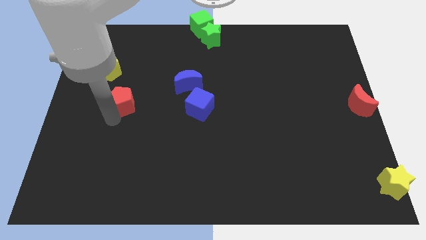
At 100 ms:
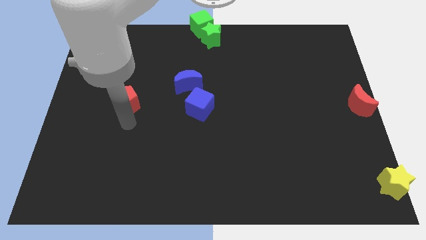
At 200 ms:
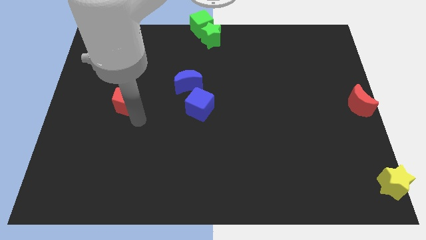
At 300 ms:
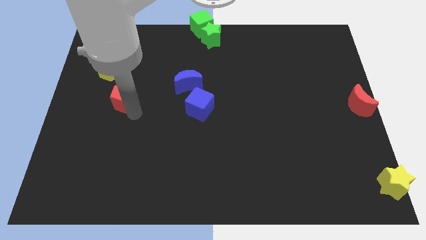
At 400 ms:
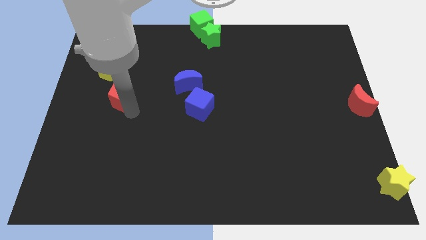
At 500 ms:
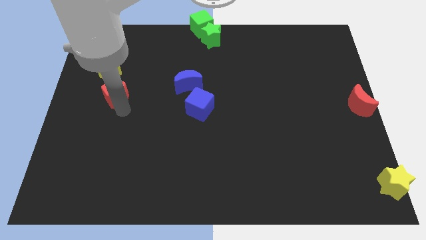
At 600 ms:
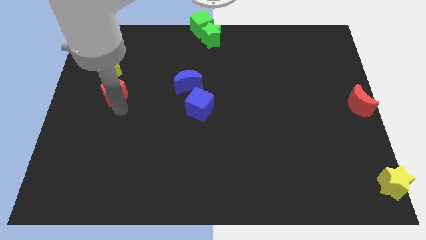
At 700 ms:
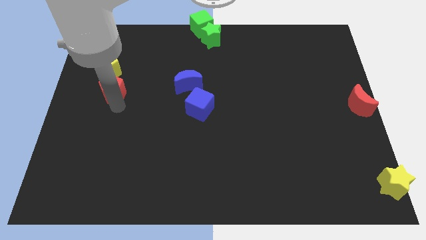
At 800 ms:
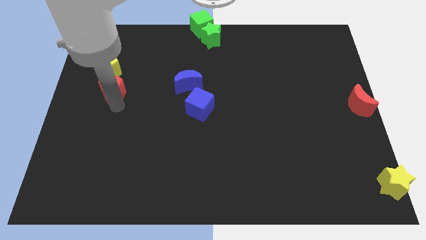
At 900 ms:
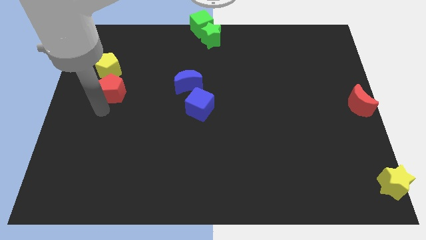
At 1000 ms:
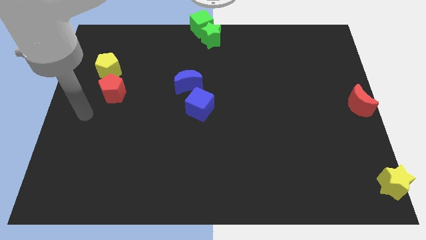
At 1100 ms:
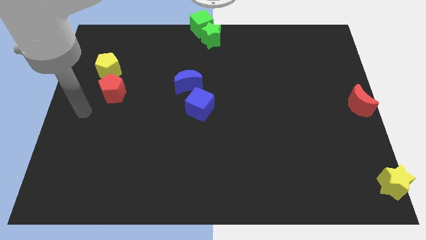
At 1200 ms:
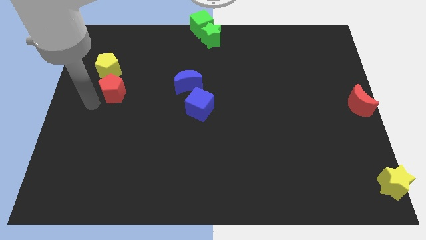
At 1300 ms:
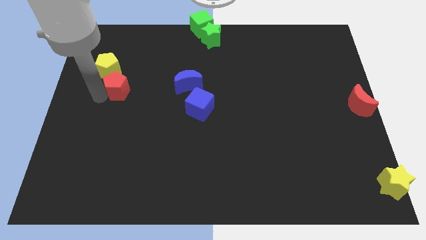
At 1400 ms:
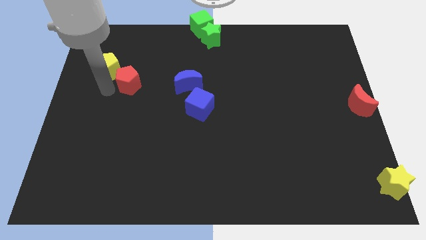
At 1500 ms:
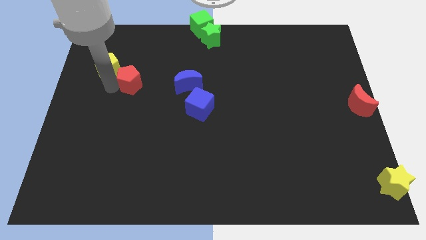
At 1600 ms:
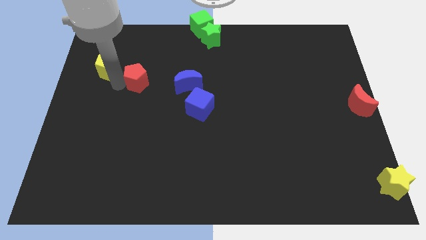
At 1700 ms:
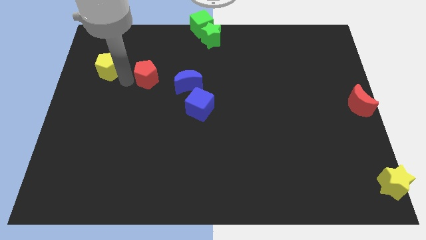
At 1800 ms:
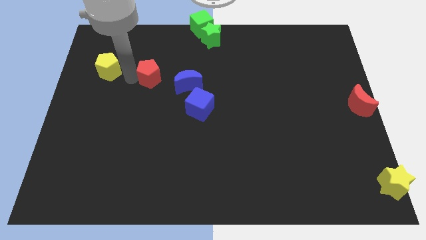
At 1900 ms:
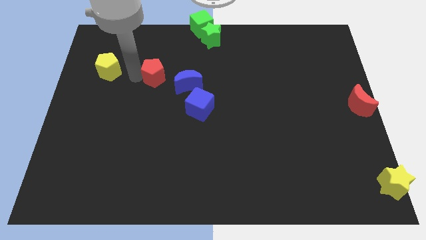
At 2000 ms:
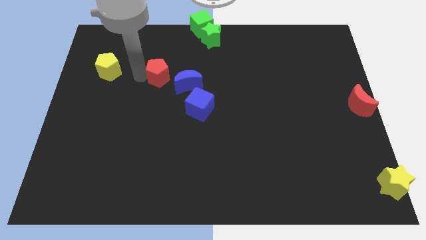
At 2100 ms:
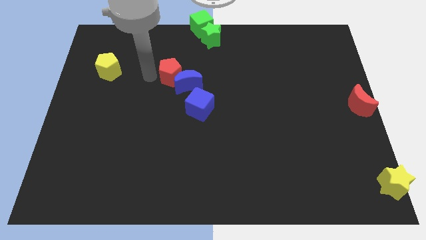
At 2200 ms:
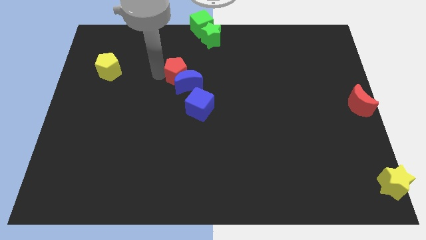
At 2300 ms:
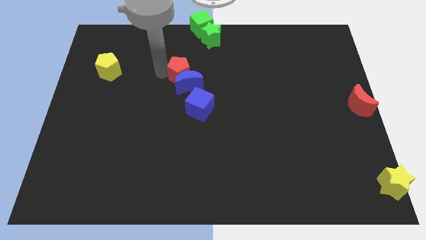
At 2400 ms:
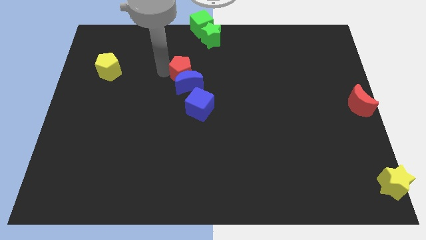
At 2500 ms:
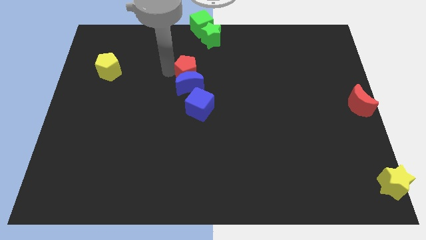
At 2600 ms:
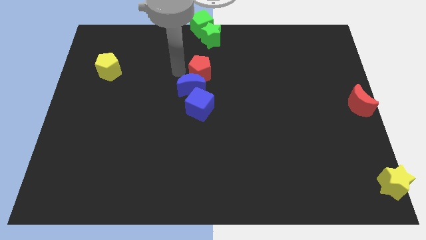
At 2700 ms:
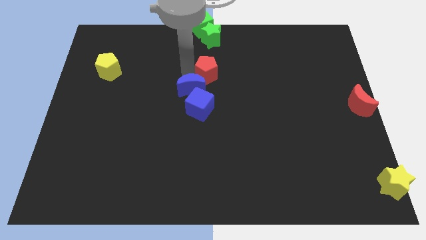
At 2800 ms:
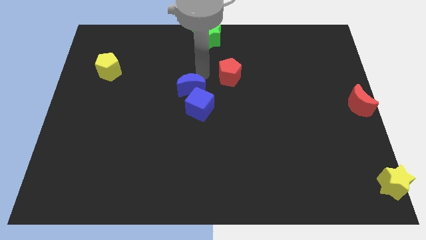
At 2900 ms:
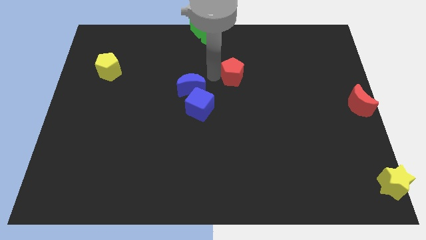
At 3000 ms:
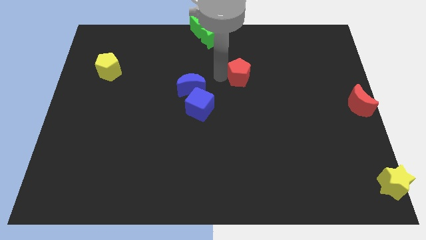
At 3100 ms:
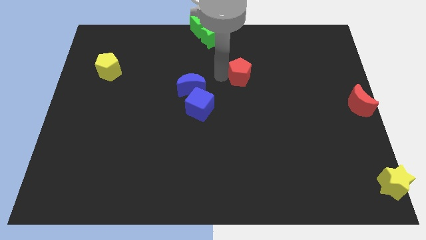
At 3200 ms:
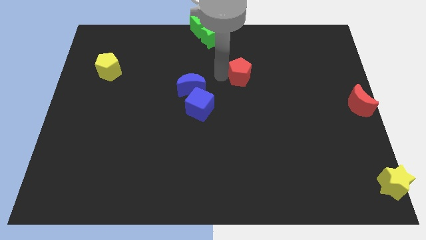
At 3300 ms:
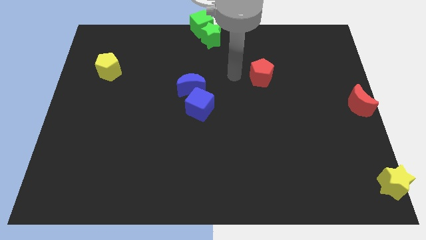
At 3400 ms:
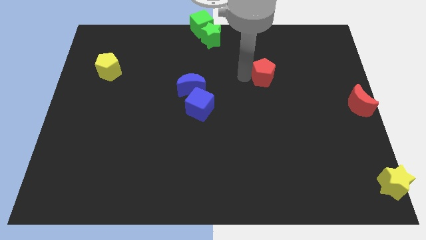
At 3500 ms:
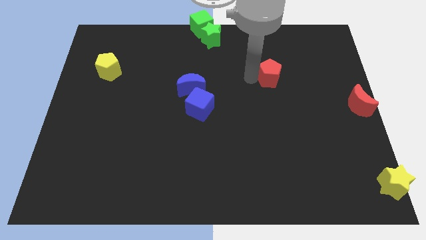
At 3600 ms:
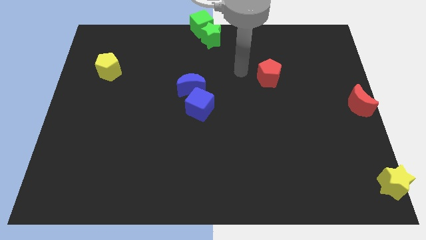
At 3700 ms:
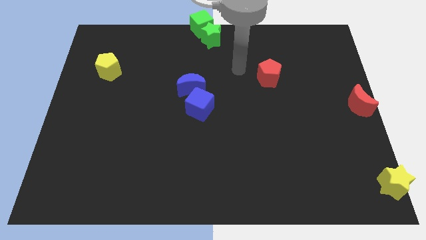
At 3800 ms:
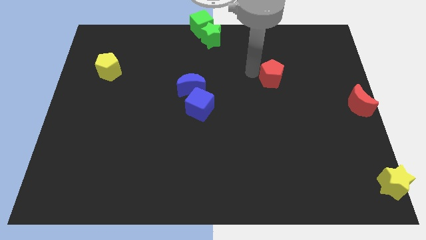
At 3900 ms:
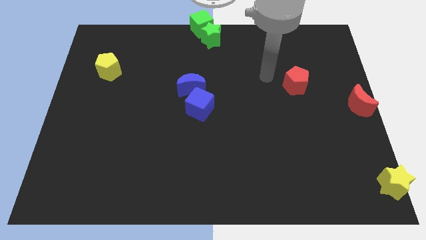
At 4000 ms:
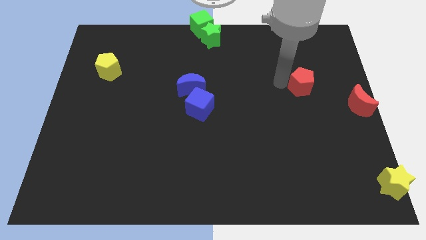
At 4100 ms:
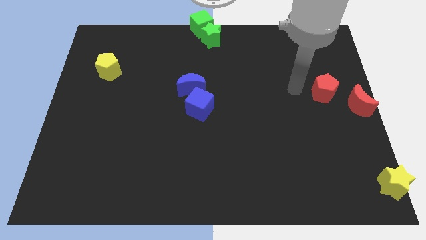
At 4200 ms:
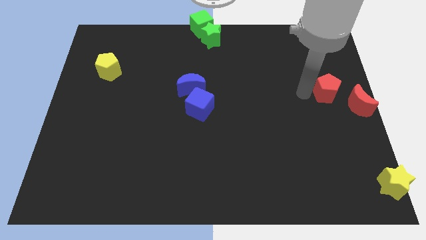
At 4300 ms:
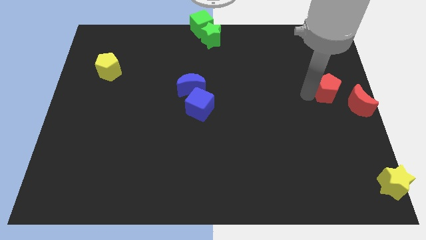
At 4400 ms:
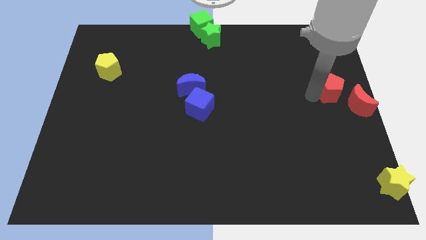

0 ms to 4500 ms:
push the red pentagon to the center right of the board

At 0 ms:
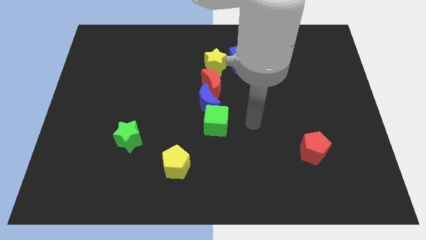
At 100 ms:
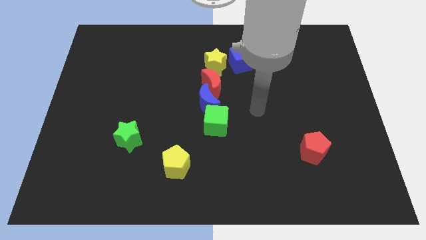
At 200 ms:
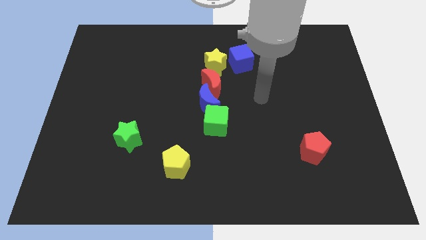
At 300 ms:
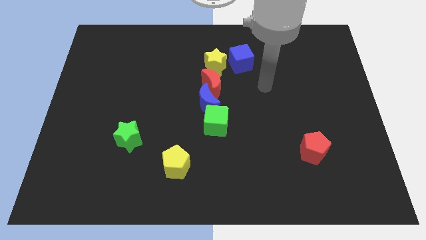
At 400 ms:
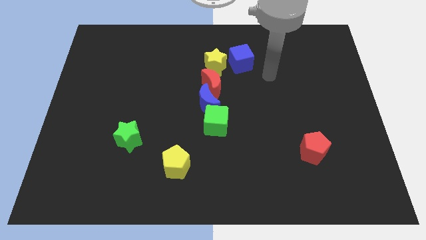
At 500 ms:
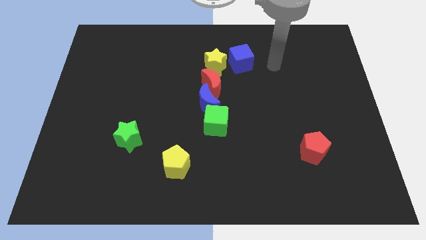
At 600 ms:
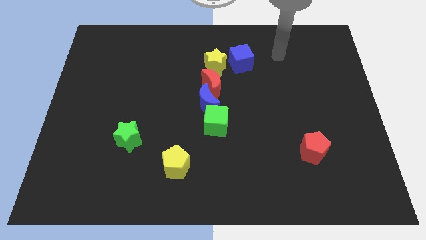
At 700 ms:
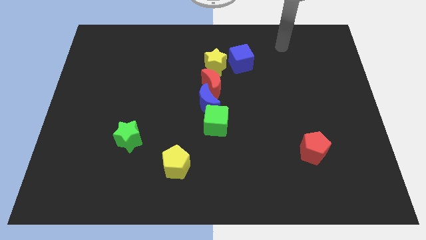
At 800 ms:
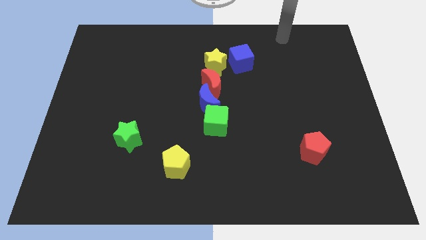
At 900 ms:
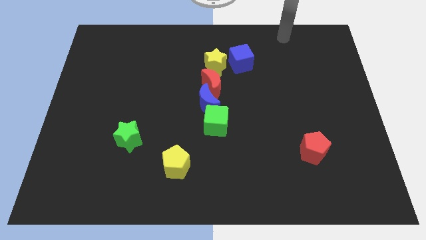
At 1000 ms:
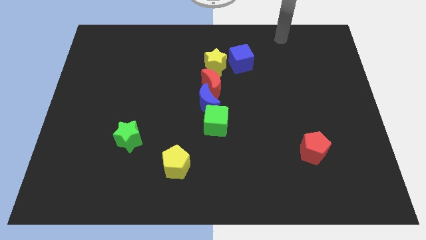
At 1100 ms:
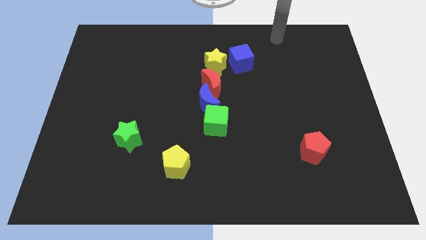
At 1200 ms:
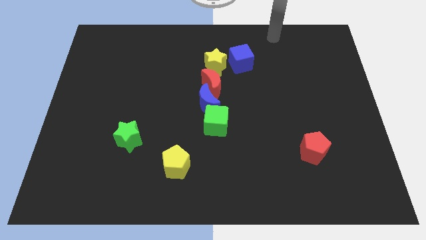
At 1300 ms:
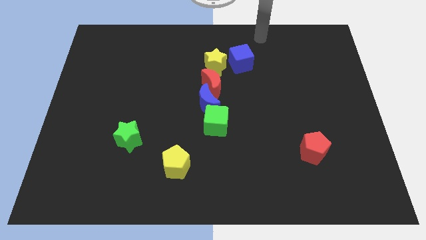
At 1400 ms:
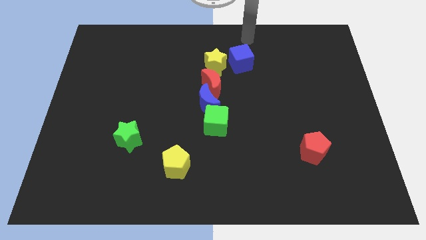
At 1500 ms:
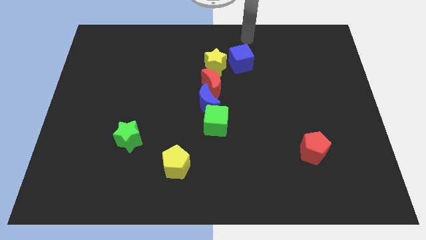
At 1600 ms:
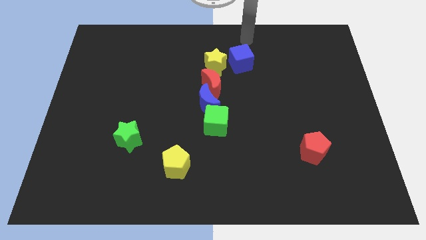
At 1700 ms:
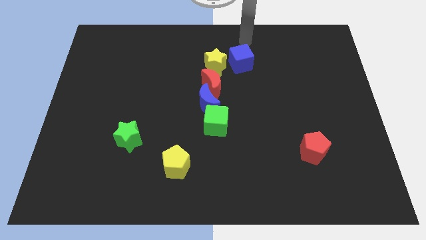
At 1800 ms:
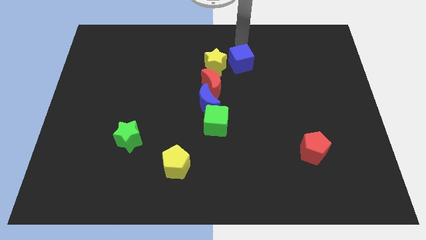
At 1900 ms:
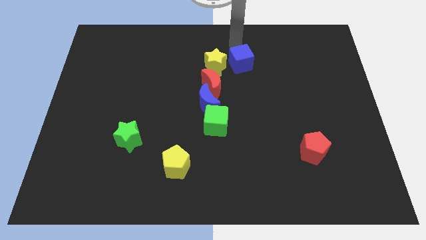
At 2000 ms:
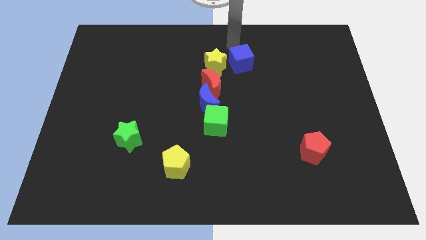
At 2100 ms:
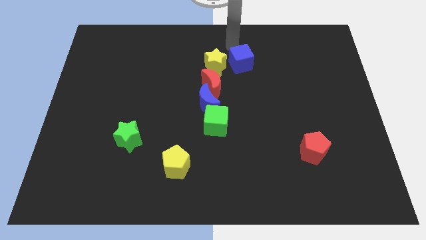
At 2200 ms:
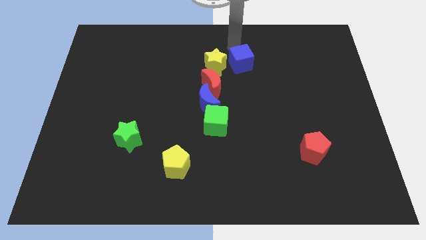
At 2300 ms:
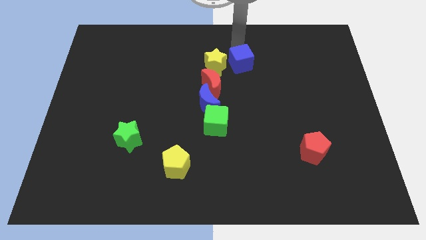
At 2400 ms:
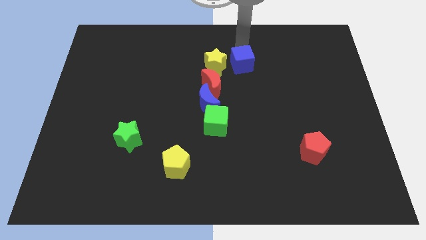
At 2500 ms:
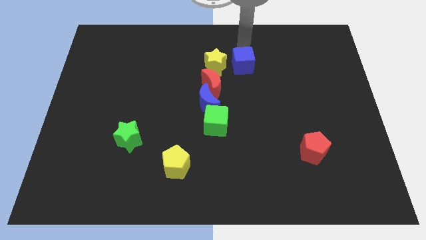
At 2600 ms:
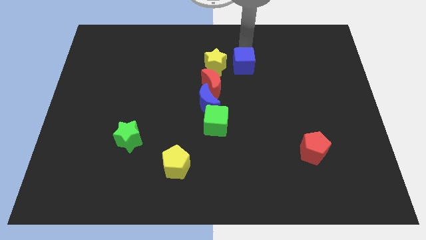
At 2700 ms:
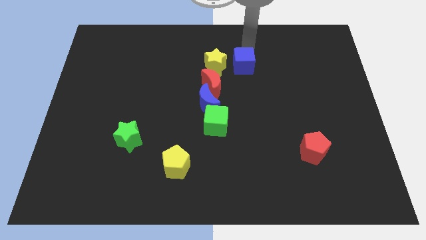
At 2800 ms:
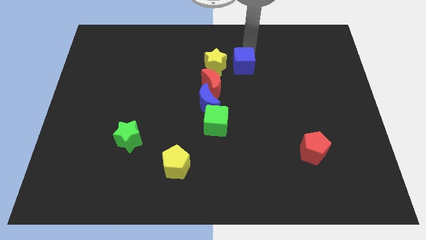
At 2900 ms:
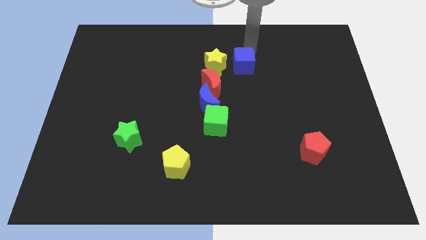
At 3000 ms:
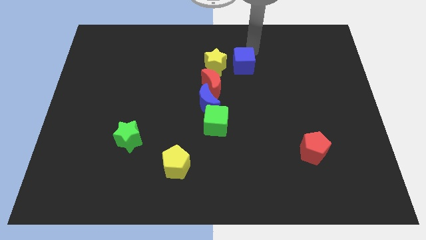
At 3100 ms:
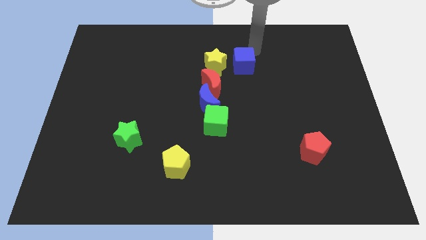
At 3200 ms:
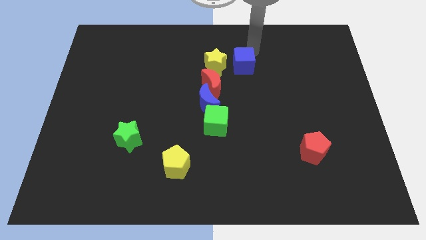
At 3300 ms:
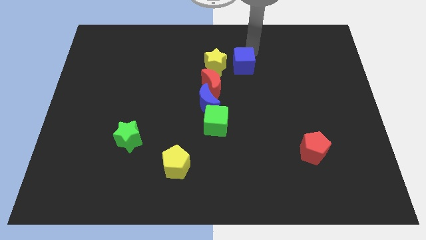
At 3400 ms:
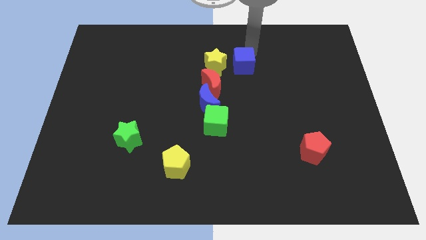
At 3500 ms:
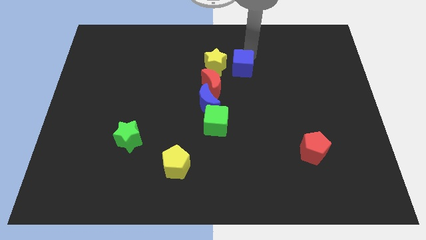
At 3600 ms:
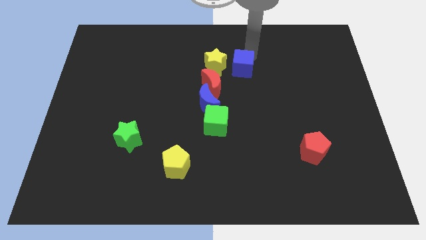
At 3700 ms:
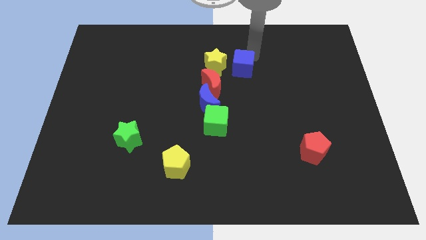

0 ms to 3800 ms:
push the blue cube slightly to the bottom

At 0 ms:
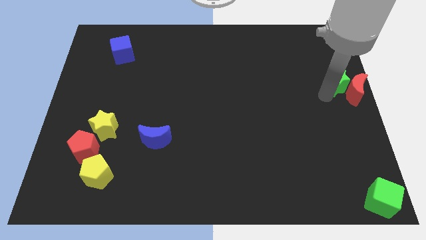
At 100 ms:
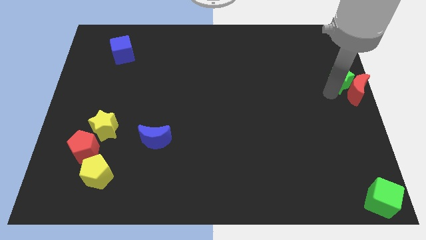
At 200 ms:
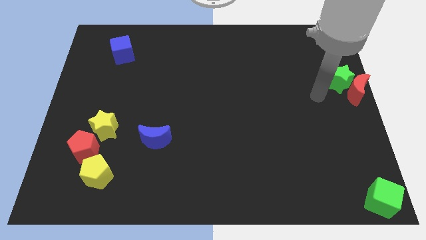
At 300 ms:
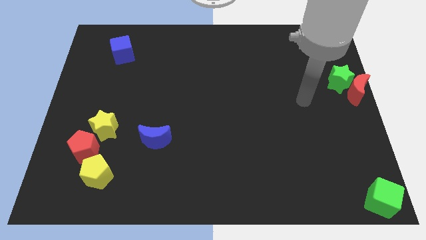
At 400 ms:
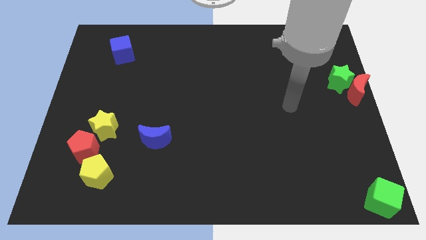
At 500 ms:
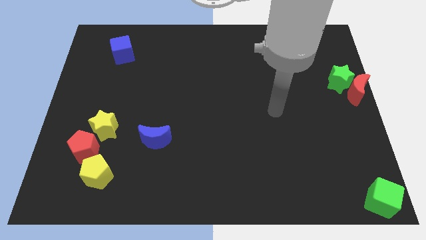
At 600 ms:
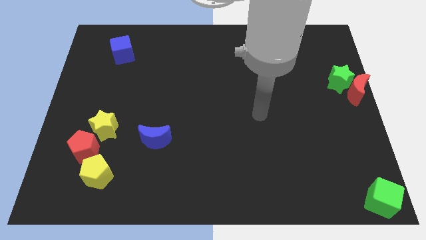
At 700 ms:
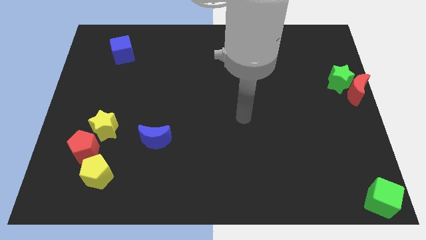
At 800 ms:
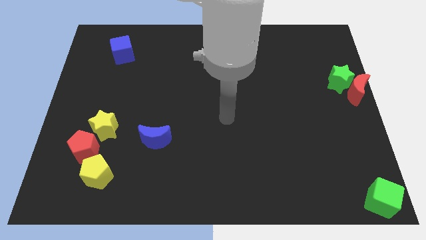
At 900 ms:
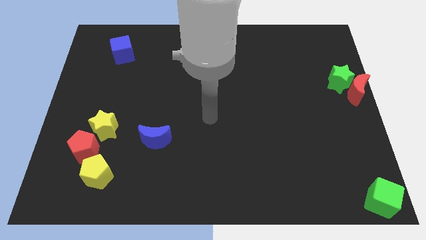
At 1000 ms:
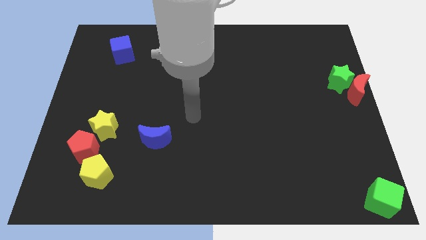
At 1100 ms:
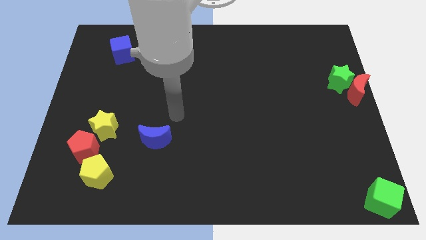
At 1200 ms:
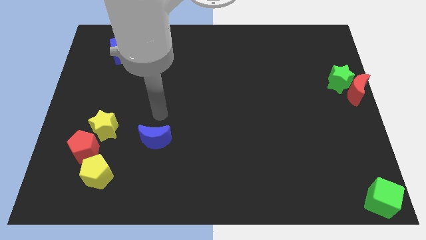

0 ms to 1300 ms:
go away from the green star
